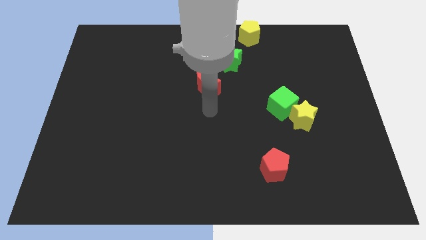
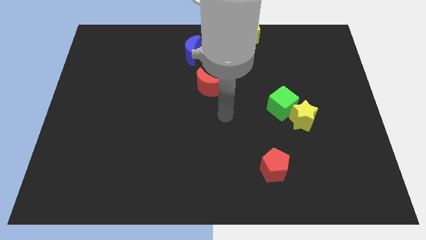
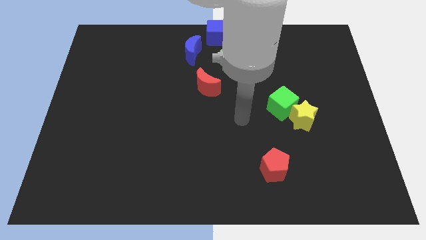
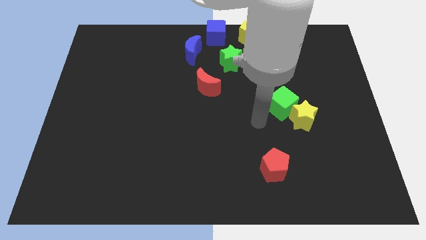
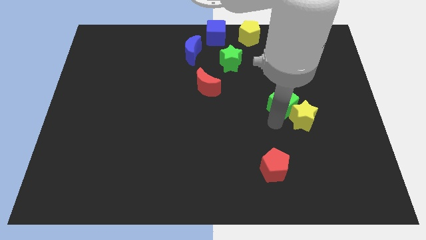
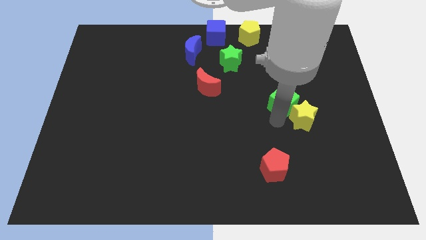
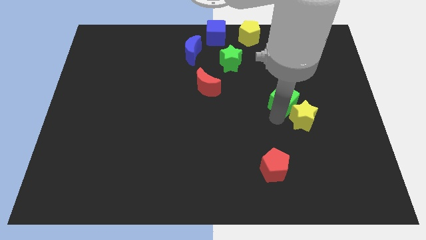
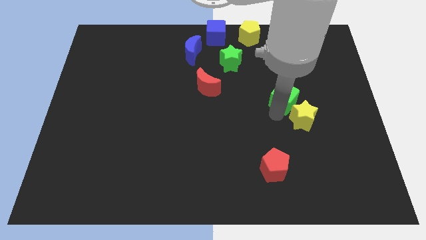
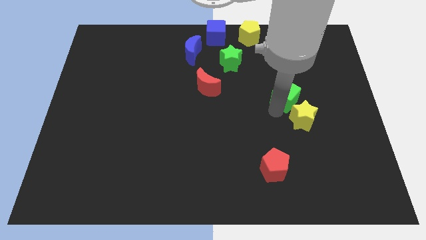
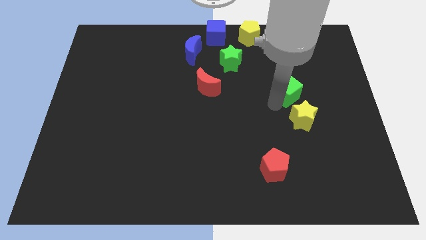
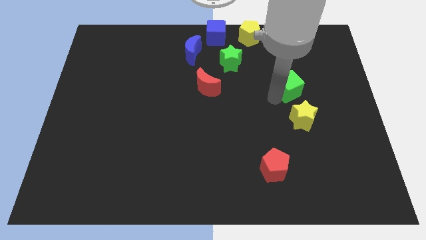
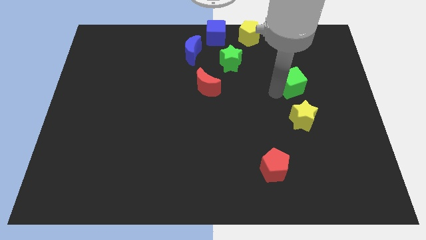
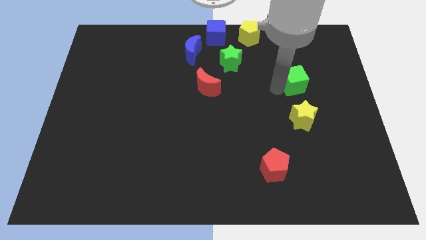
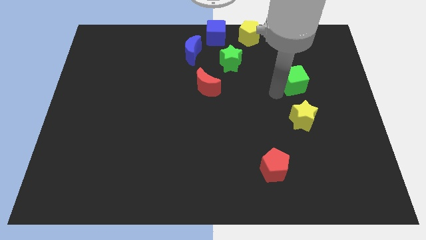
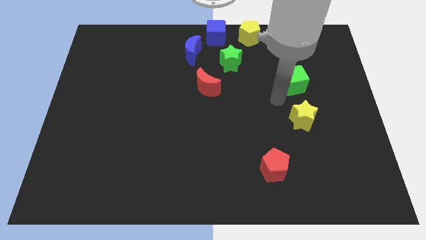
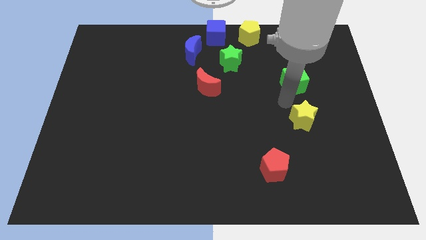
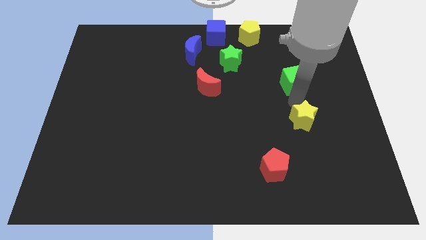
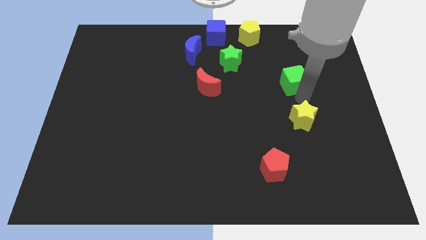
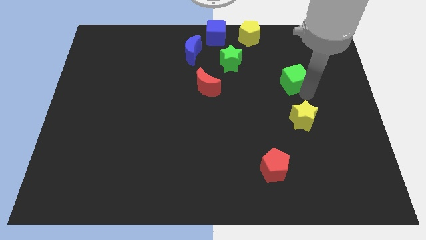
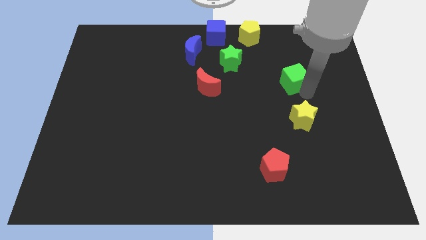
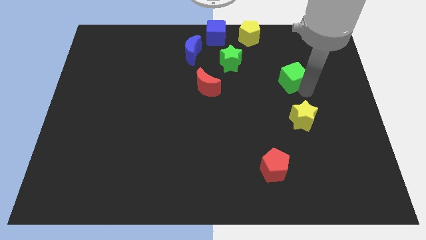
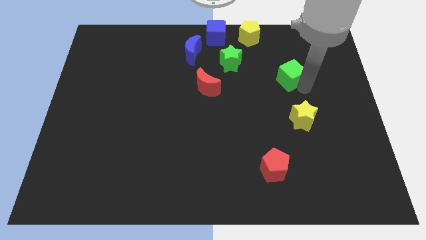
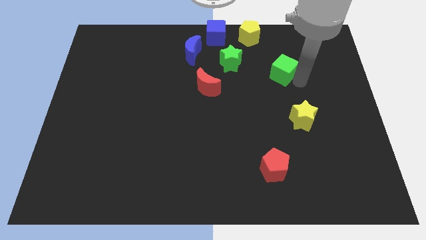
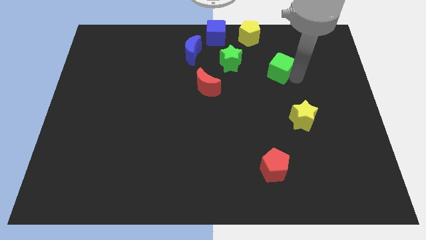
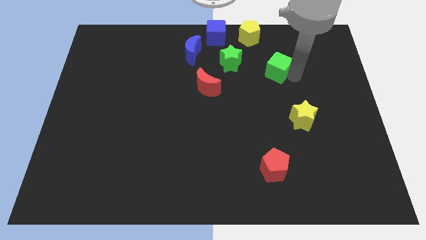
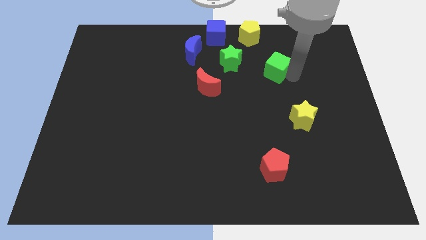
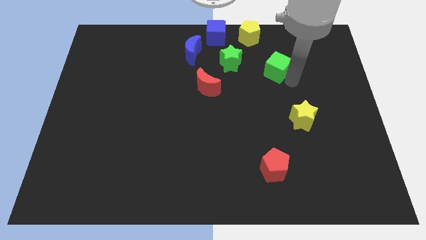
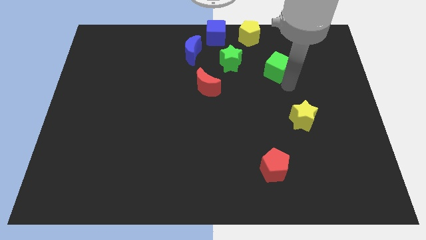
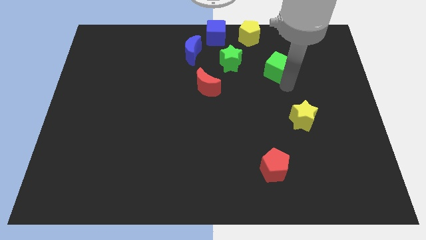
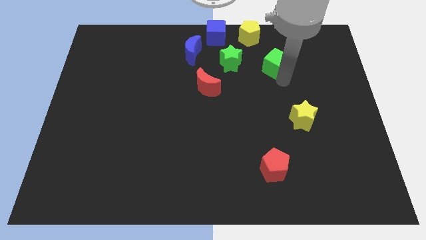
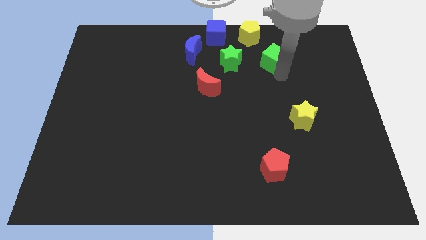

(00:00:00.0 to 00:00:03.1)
place the green cube horizontal to the green star

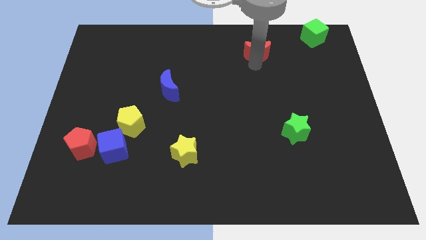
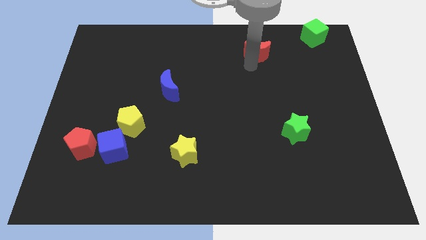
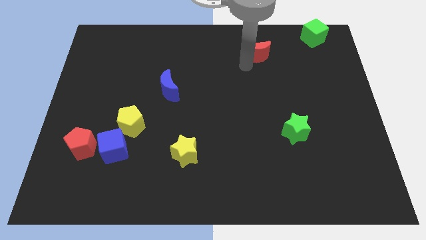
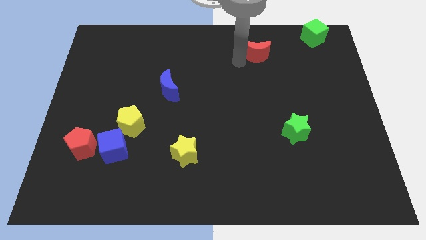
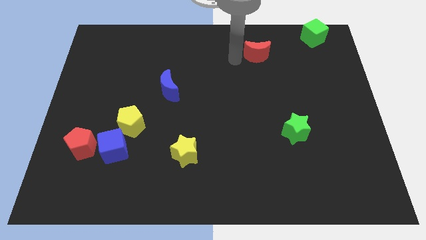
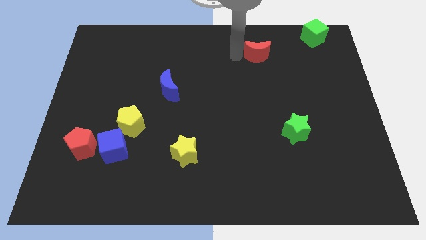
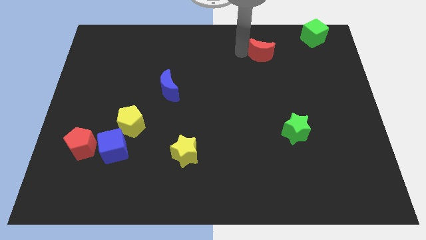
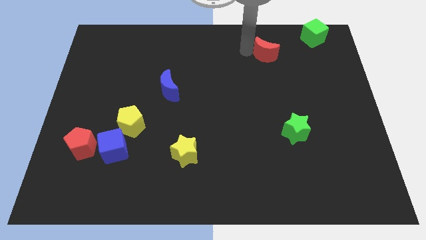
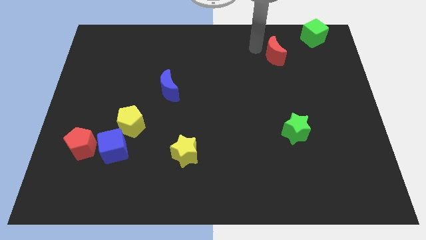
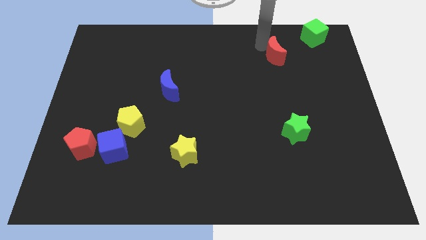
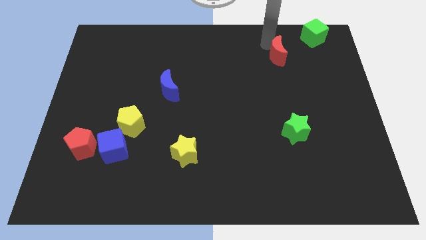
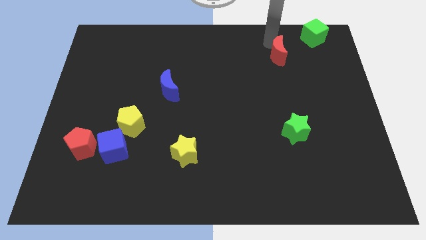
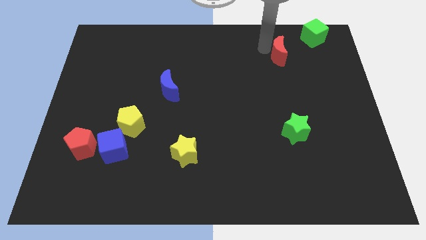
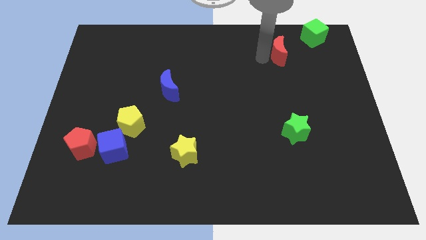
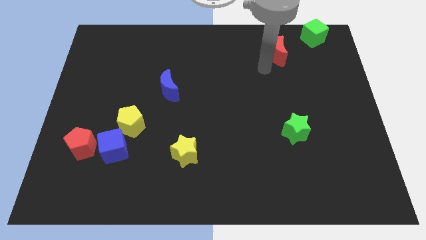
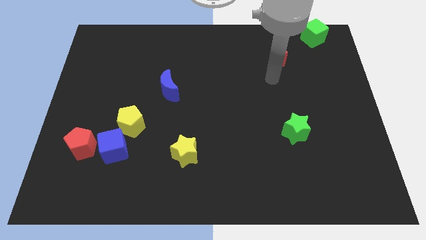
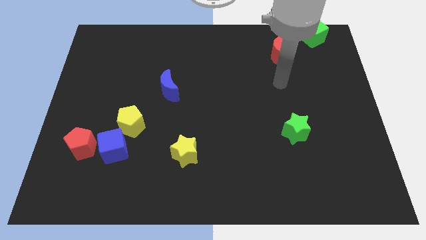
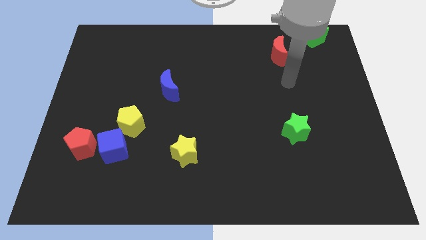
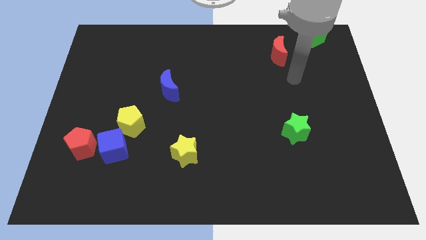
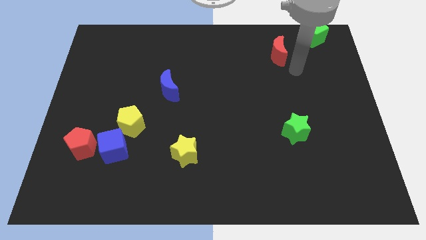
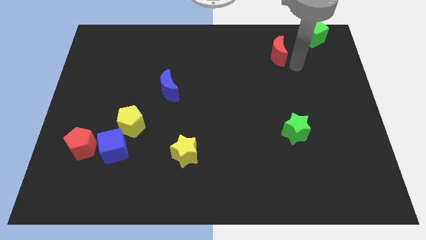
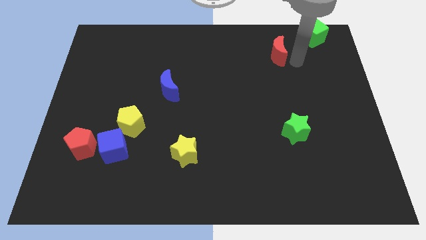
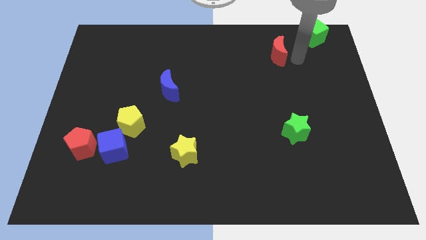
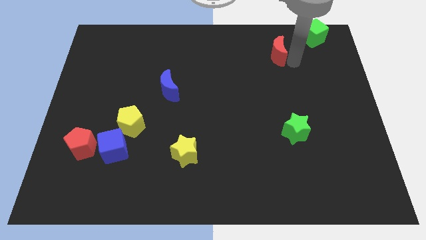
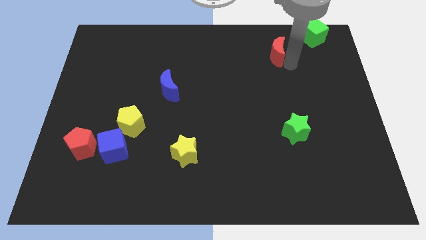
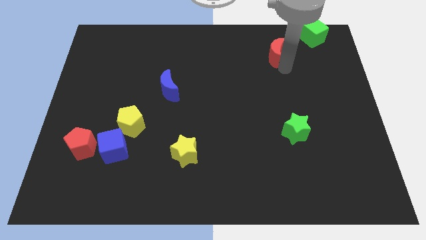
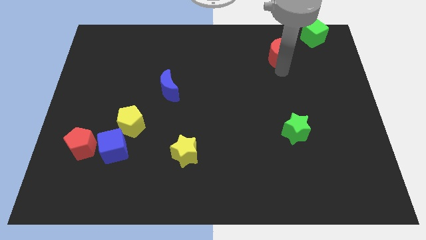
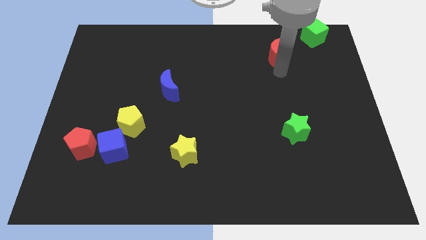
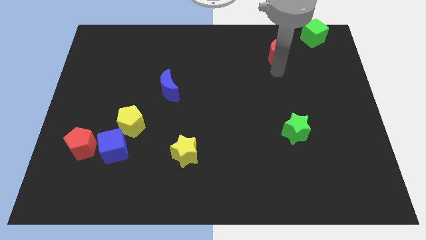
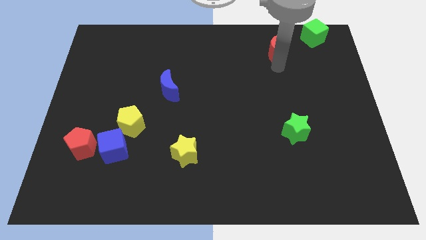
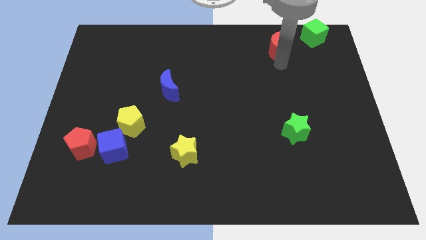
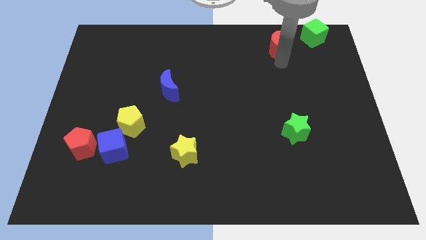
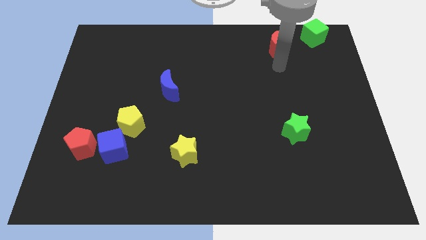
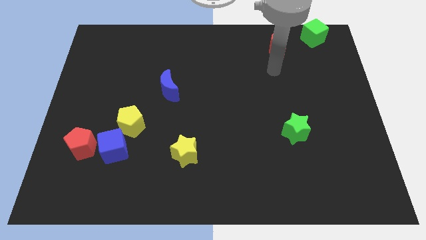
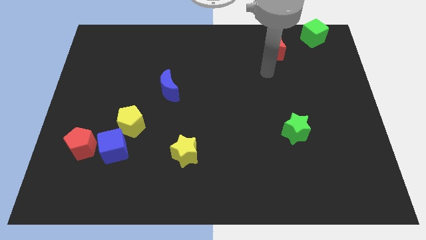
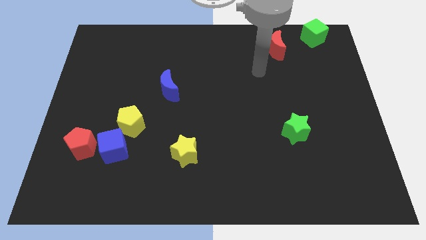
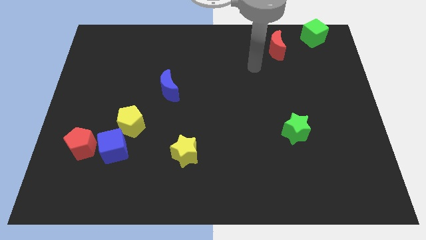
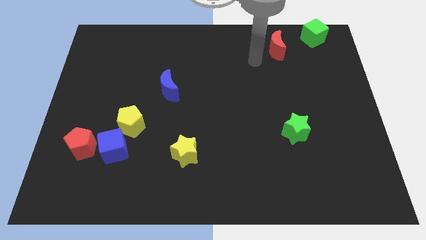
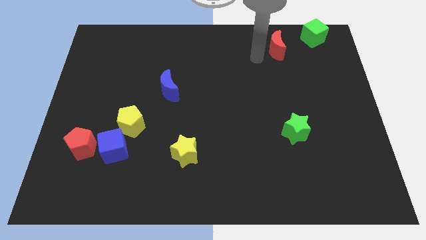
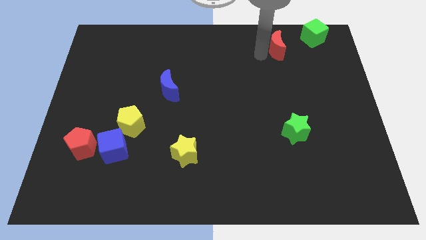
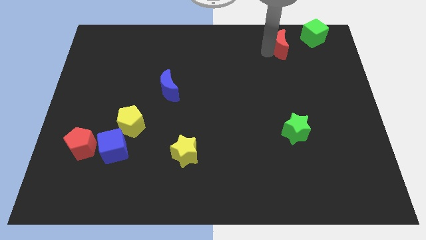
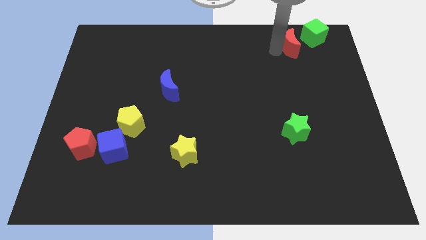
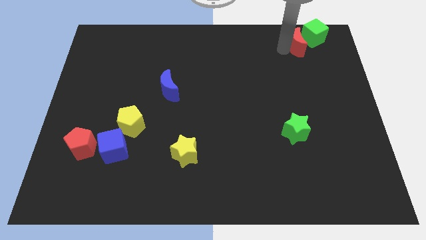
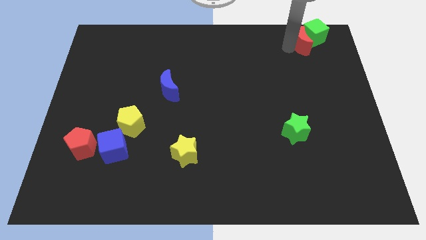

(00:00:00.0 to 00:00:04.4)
move the red crescent into the green cube

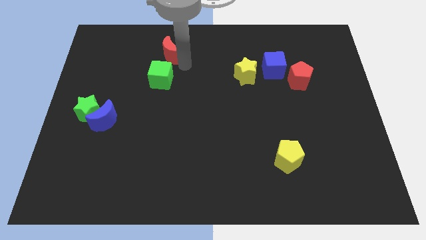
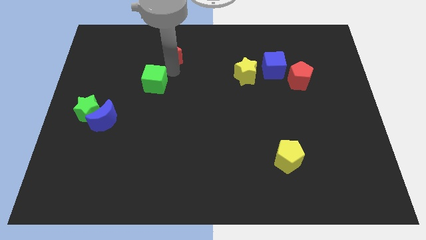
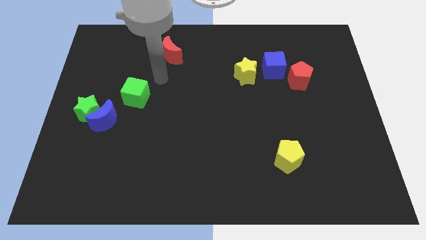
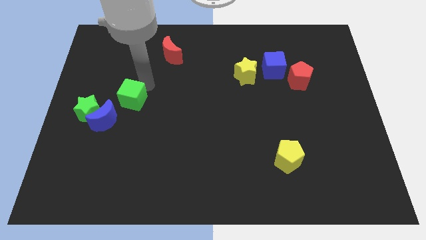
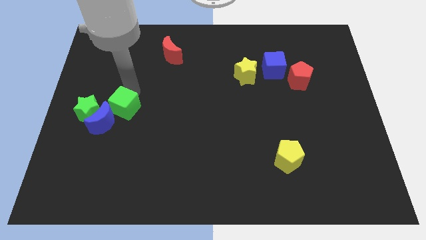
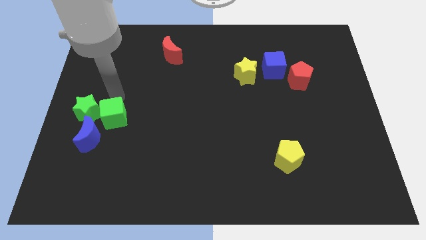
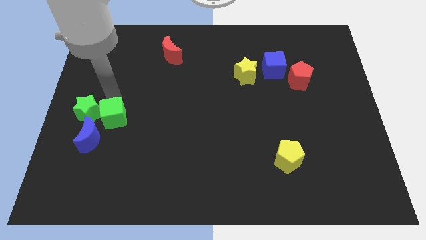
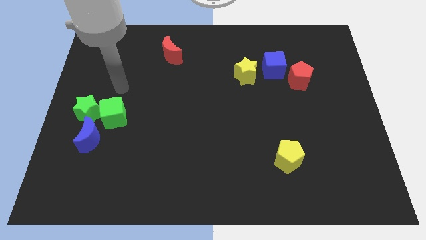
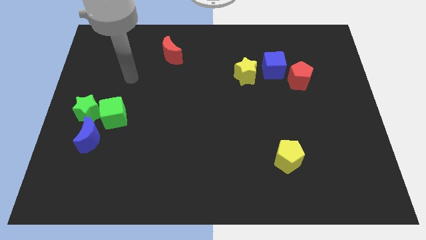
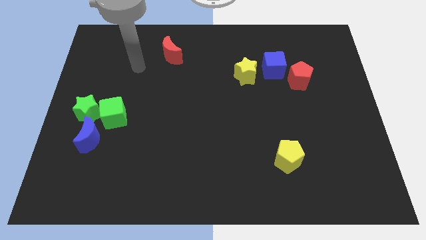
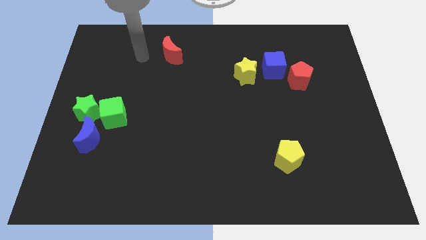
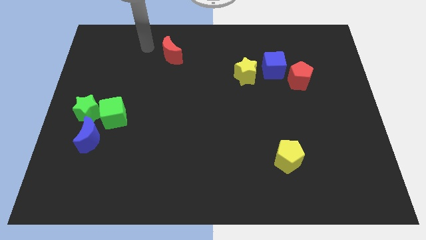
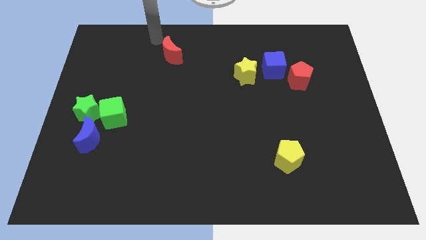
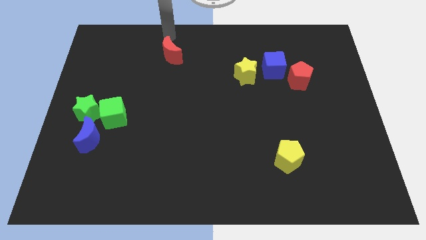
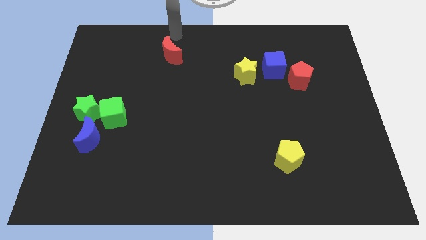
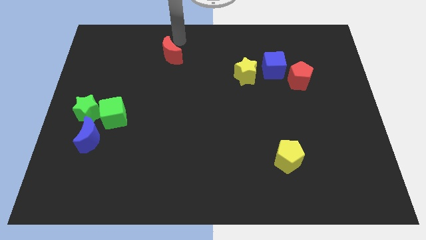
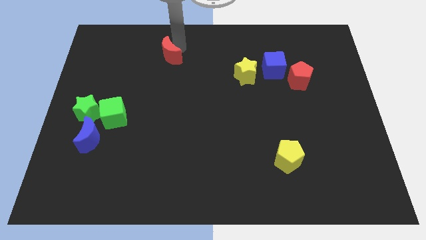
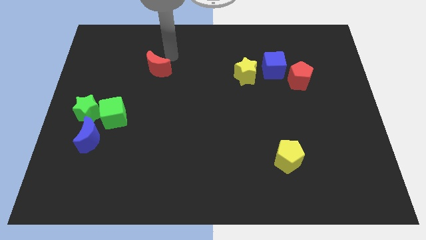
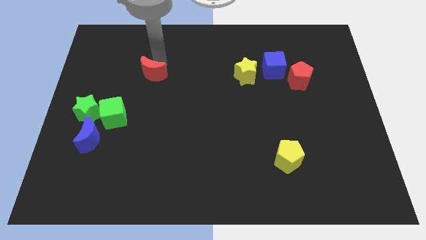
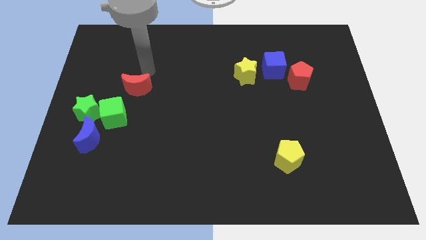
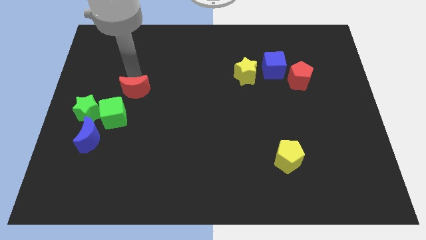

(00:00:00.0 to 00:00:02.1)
push the green cube close to the green star
